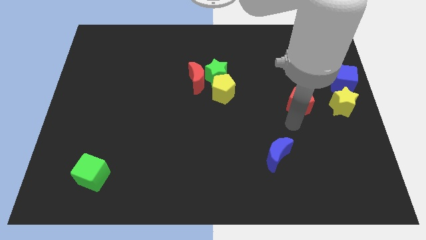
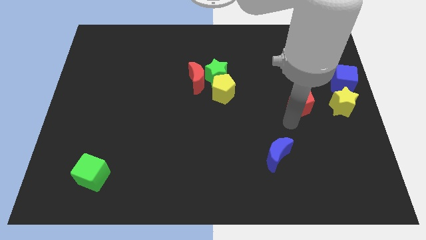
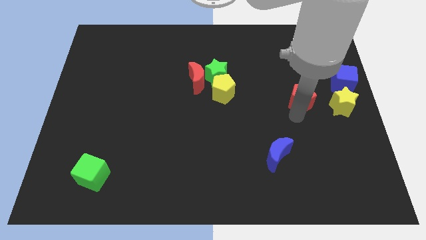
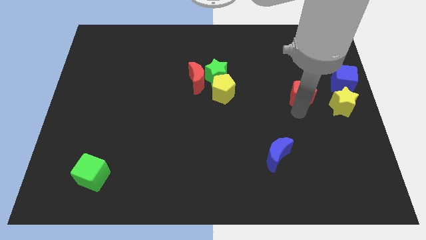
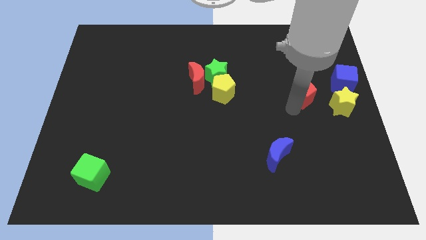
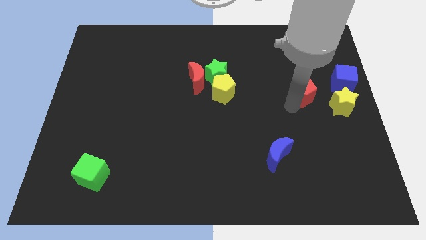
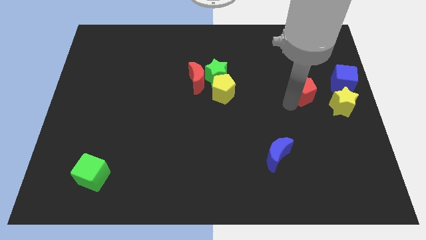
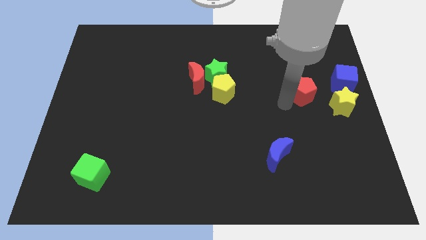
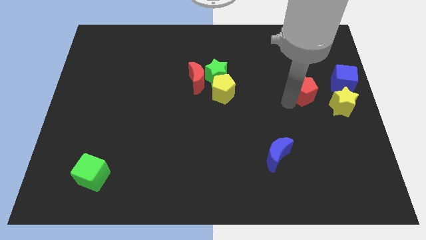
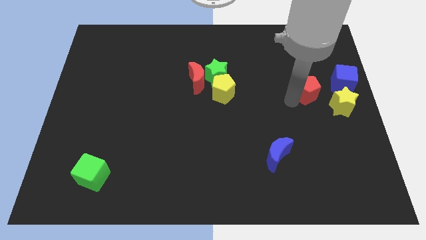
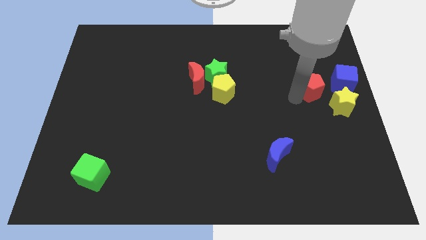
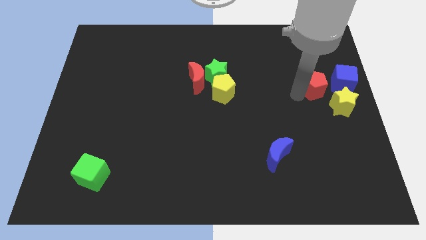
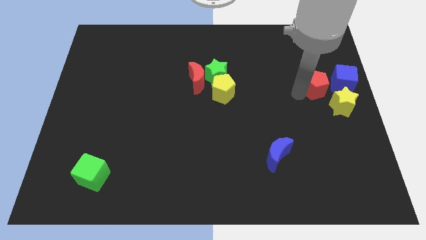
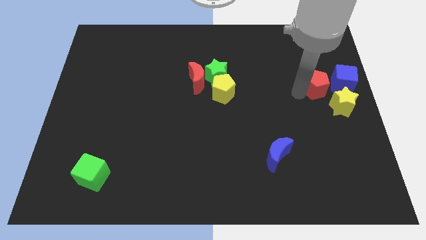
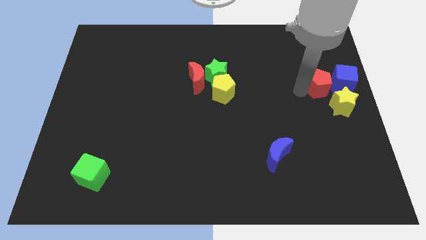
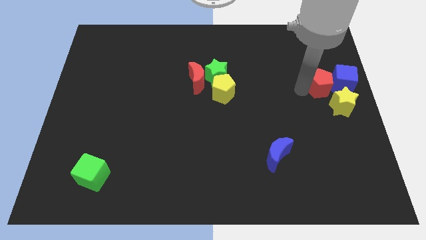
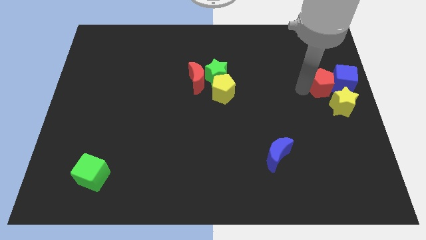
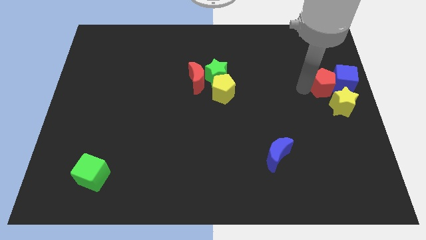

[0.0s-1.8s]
push the red pentagon into the left side of the blue cube

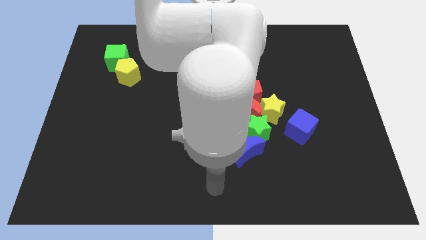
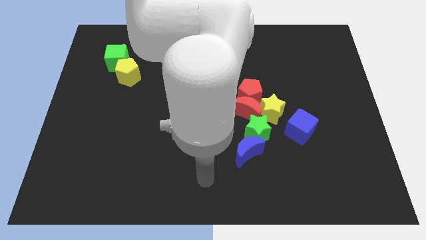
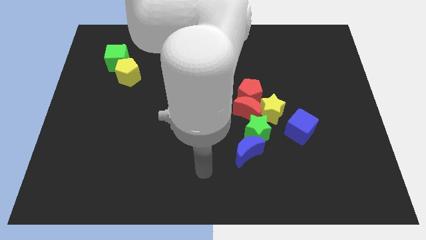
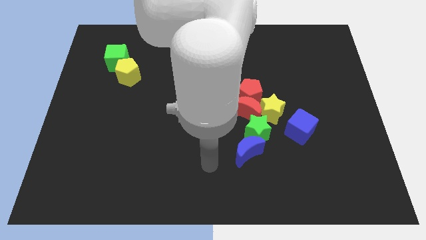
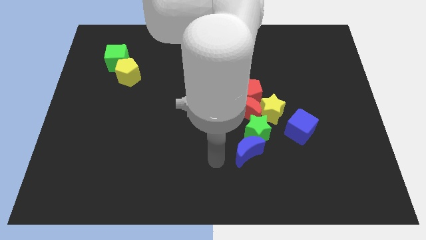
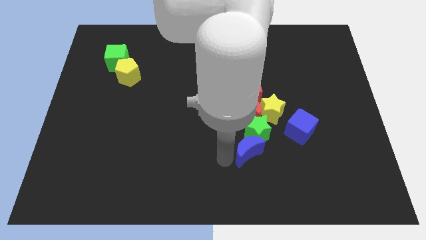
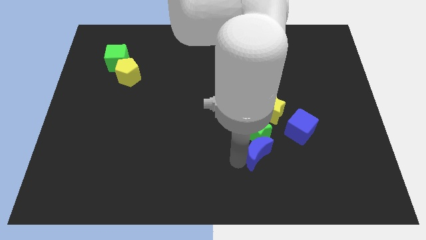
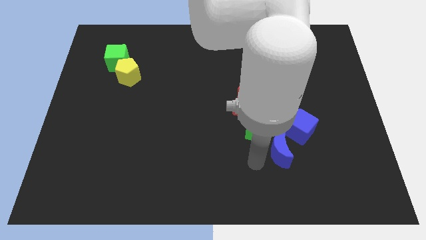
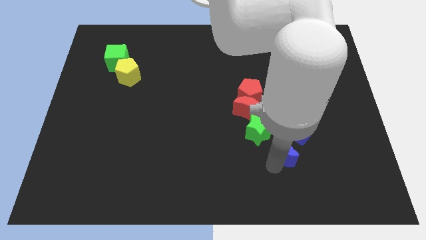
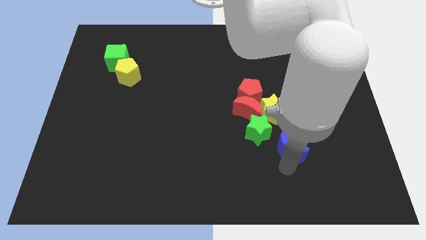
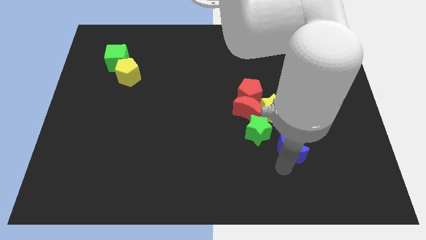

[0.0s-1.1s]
place the blue crescent below the blue cube

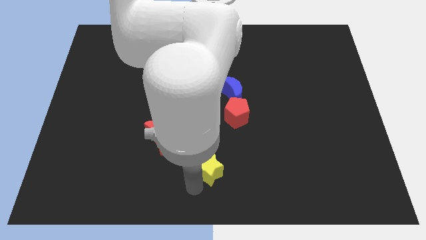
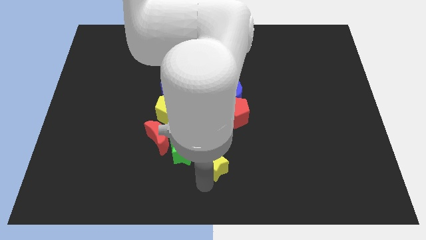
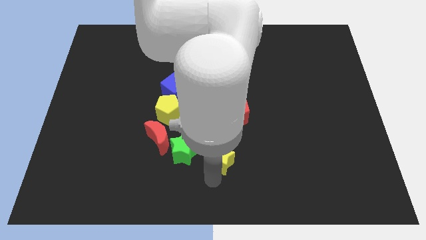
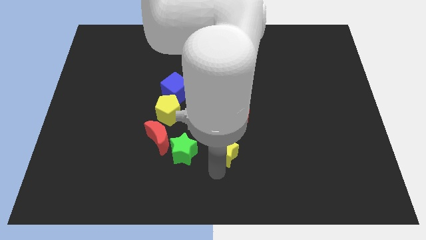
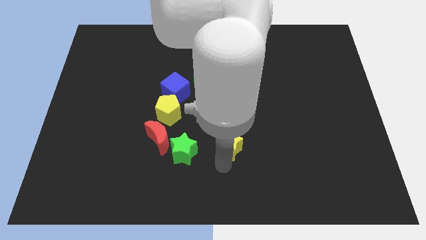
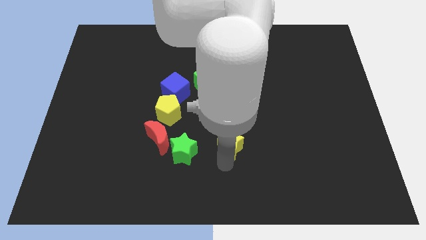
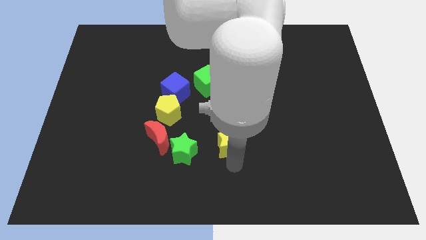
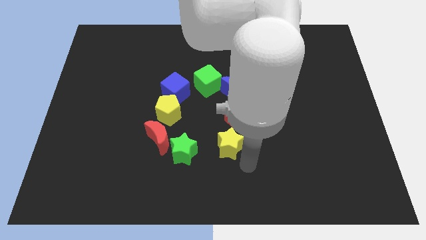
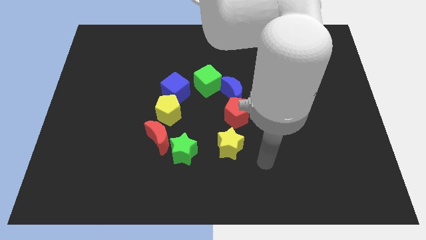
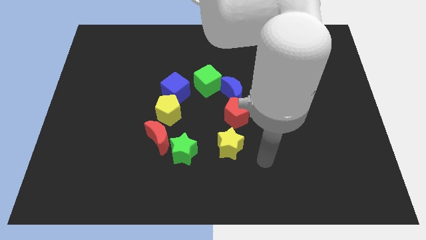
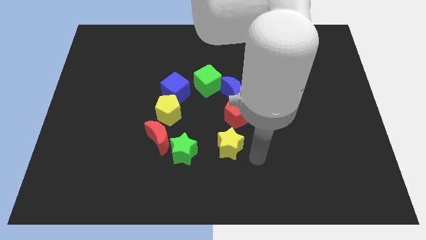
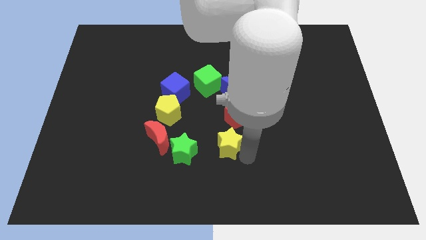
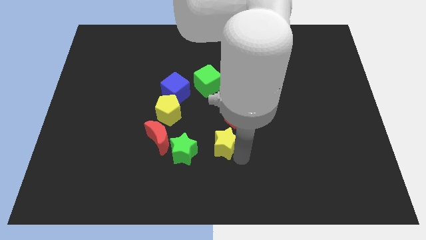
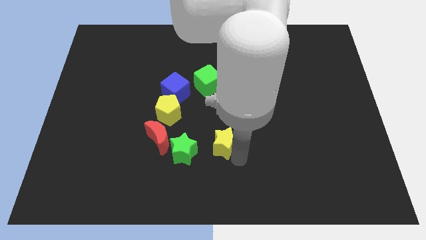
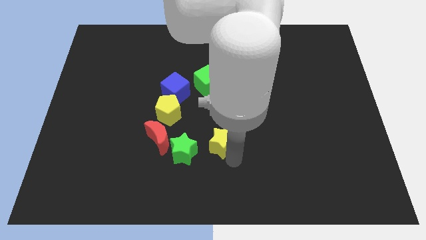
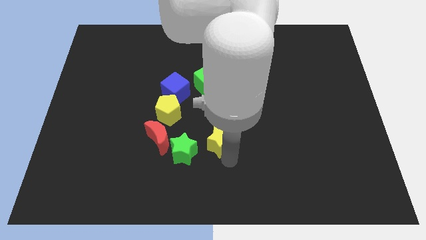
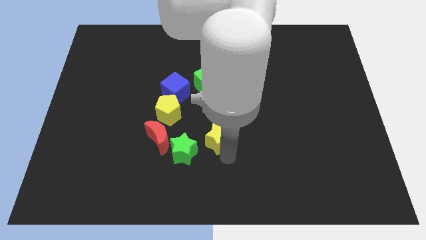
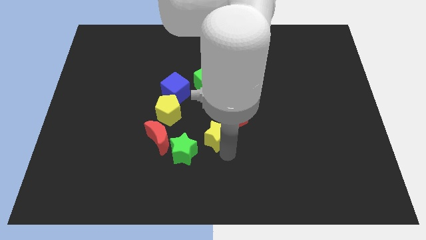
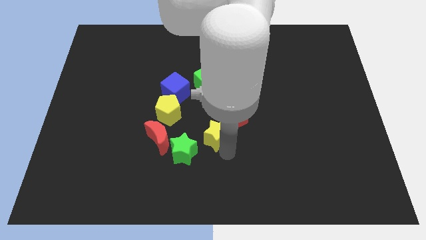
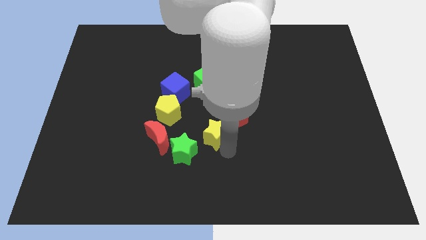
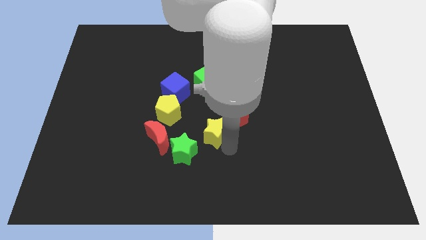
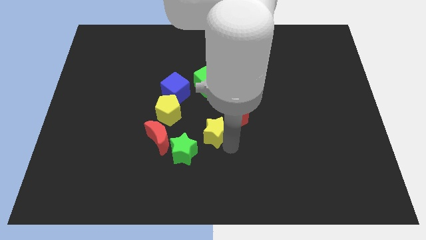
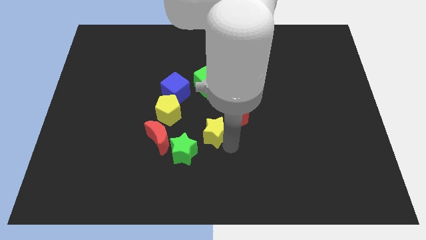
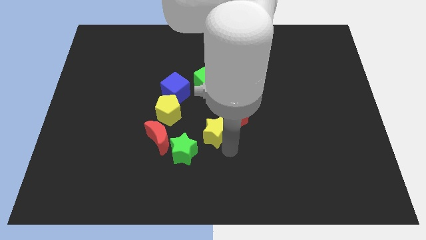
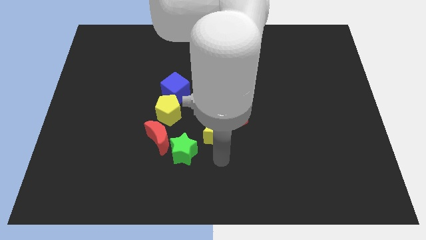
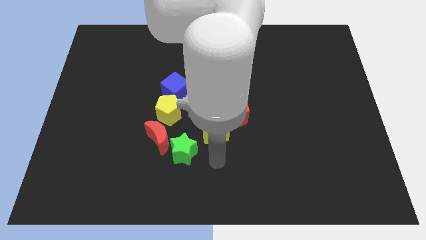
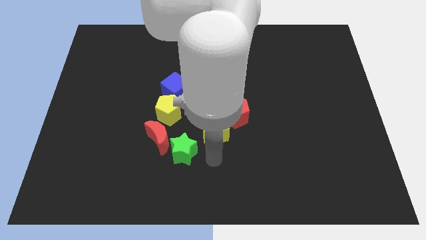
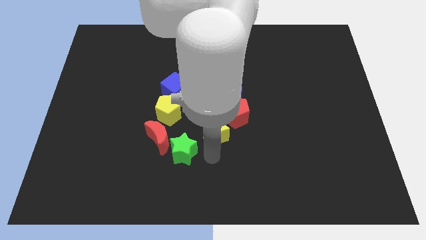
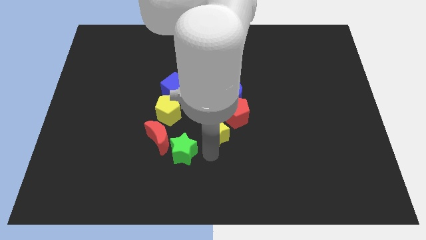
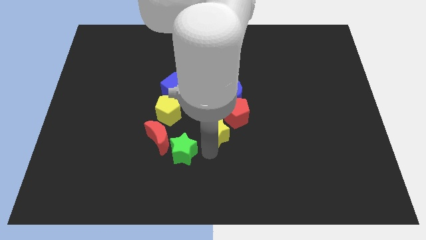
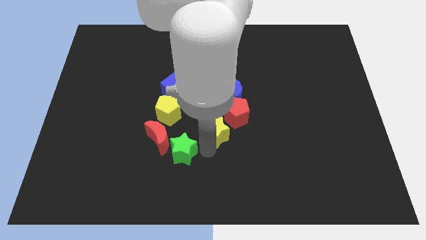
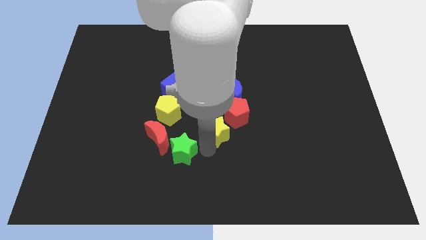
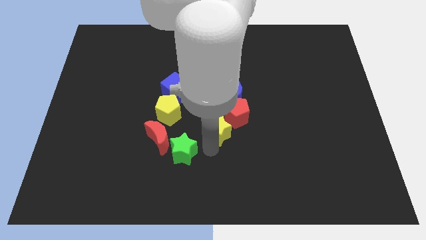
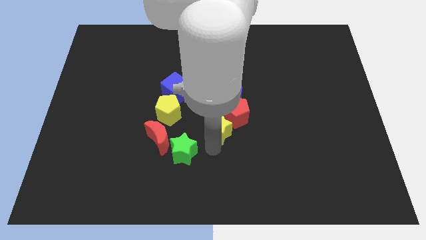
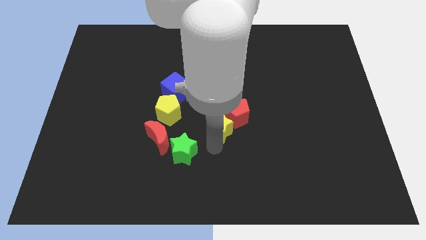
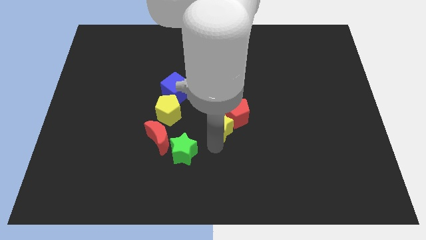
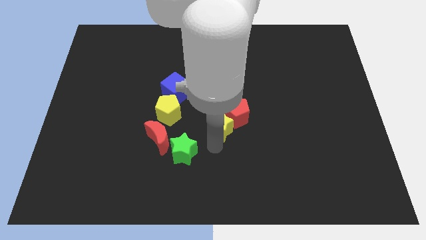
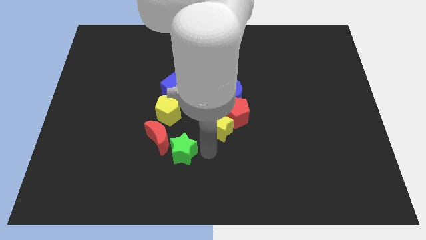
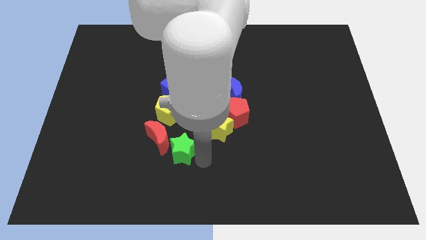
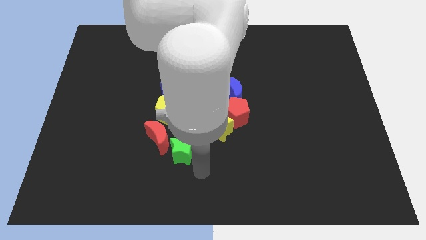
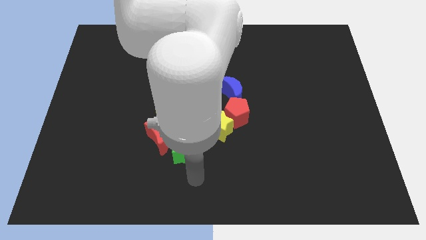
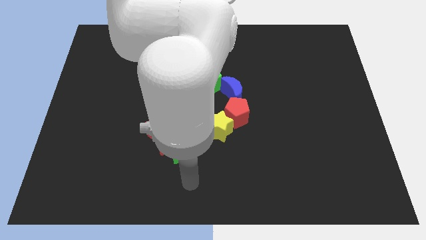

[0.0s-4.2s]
push the yellow star into the red pentagon

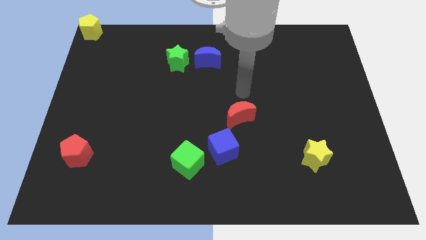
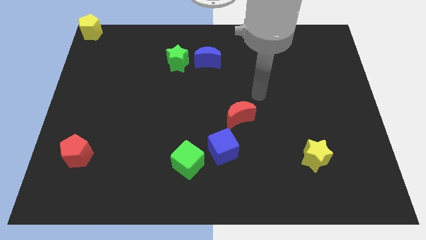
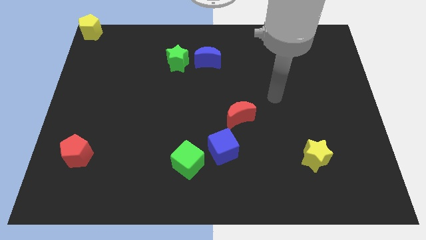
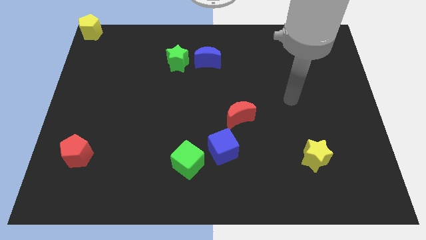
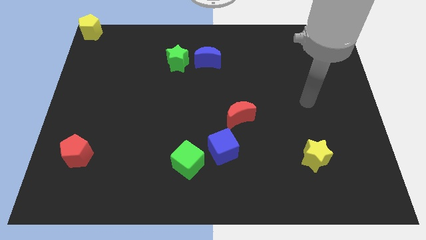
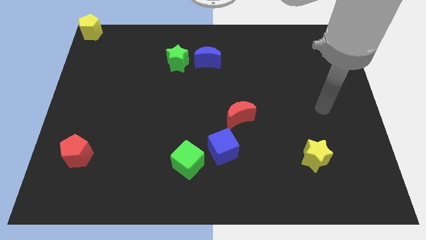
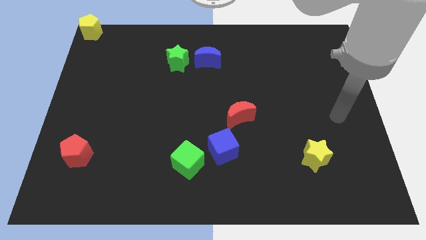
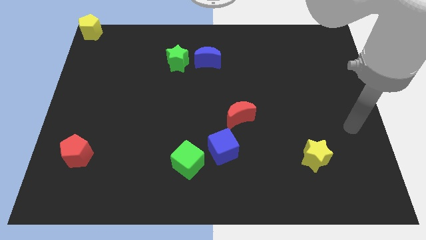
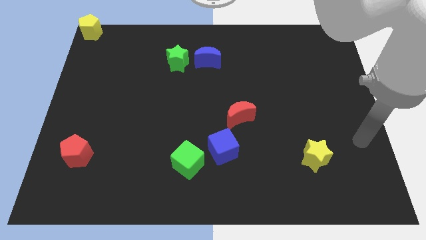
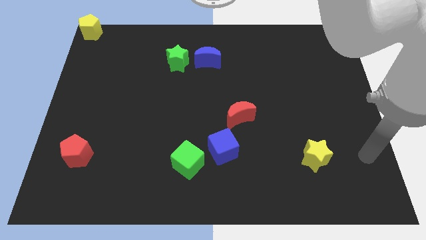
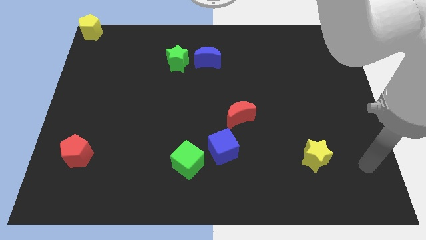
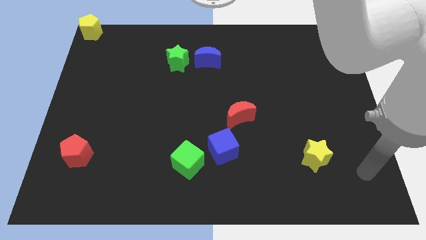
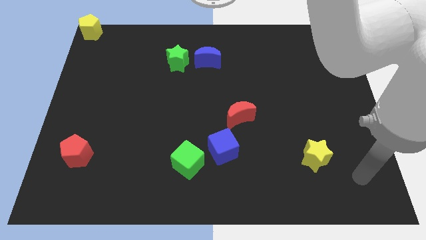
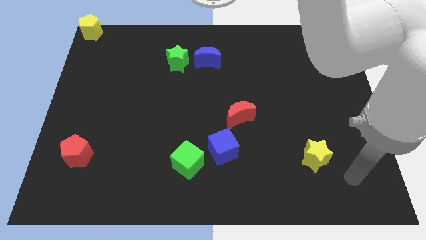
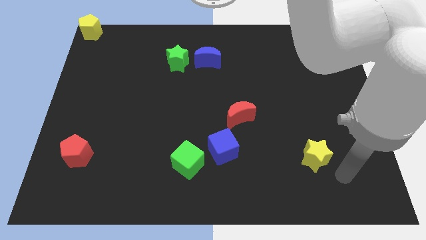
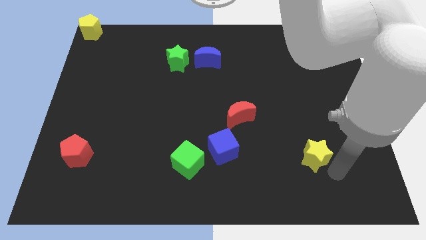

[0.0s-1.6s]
move your arm towards yellow star

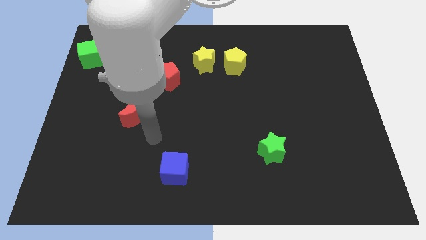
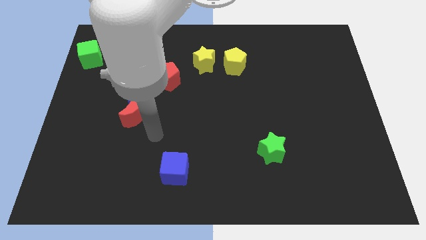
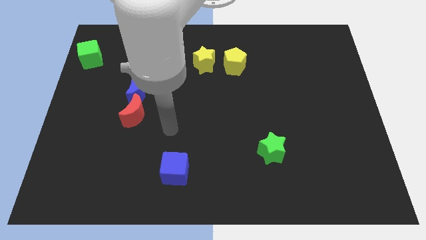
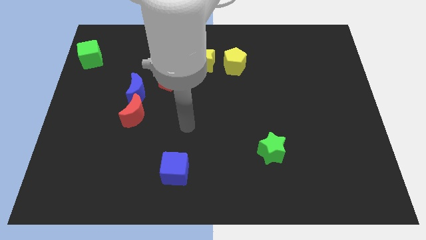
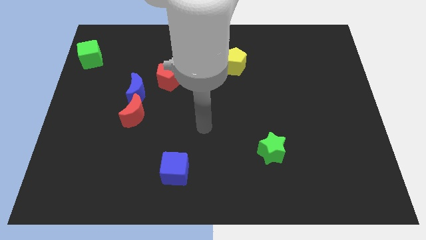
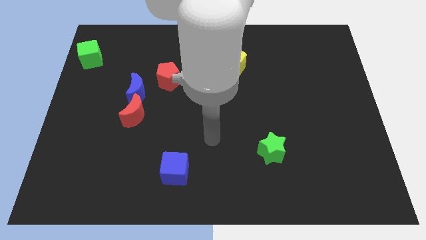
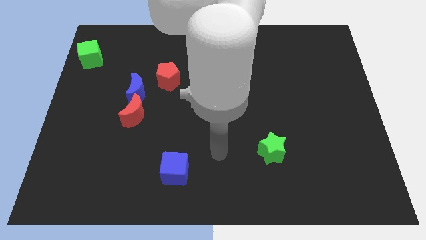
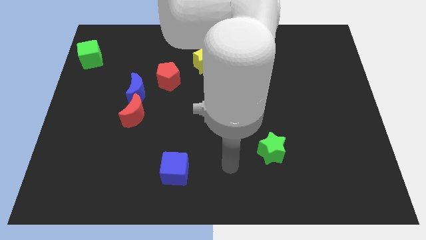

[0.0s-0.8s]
place your hand at the right of the blue cube
